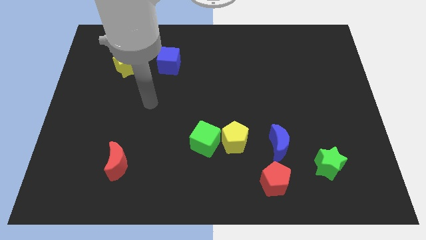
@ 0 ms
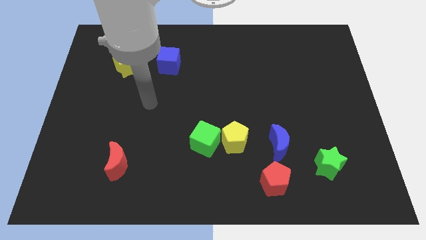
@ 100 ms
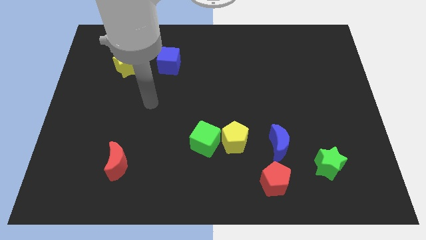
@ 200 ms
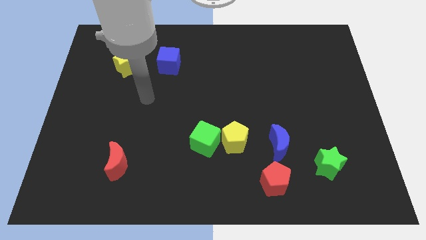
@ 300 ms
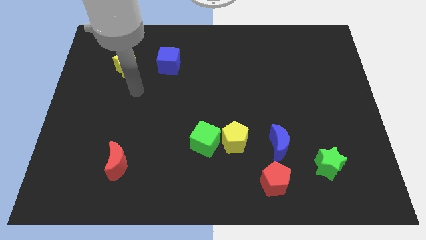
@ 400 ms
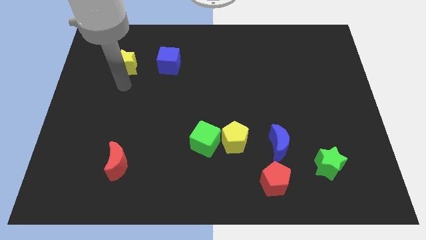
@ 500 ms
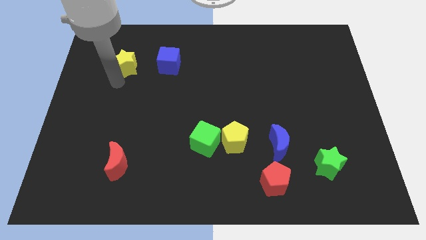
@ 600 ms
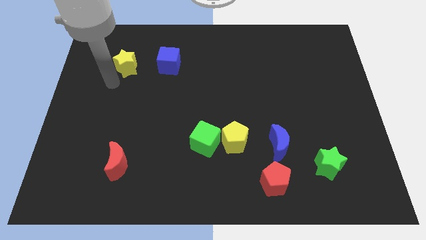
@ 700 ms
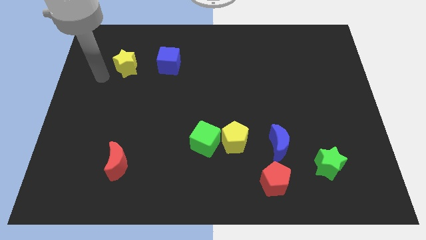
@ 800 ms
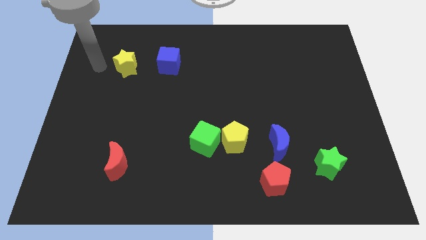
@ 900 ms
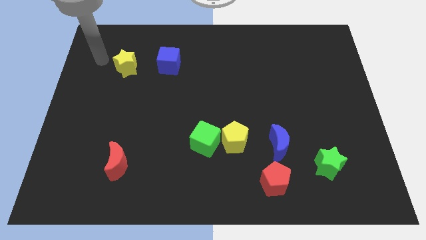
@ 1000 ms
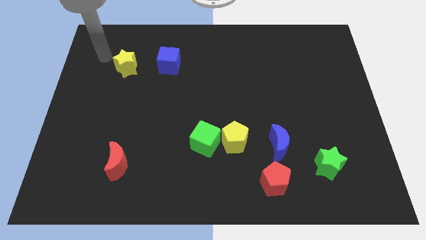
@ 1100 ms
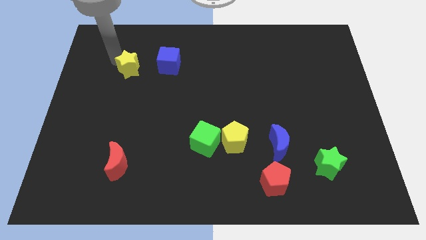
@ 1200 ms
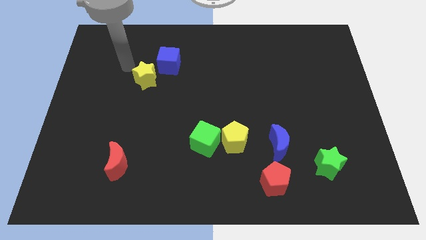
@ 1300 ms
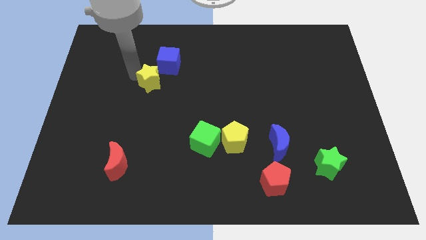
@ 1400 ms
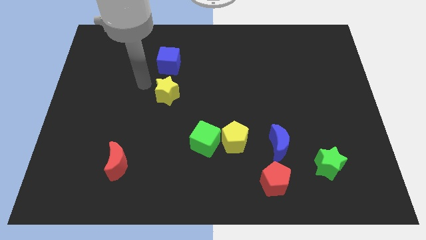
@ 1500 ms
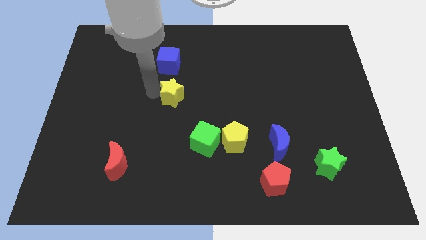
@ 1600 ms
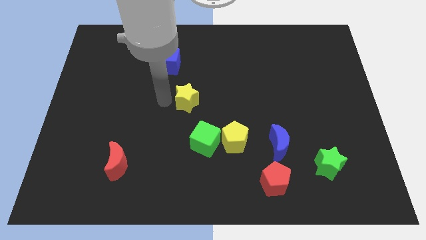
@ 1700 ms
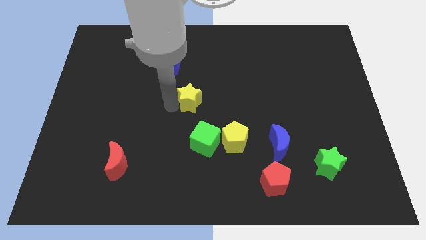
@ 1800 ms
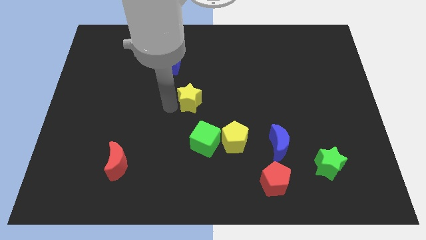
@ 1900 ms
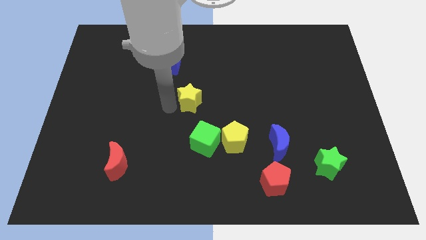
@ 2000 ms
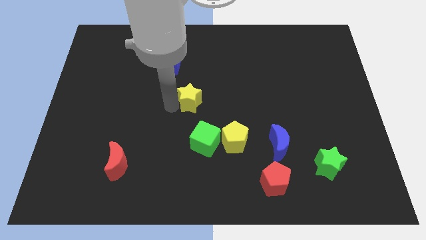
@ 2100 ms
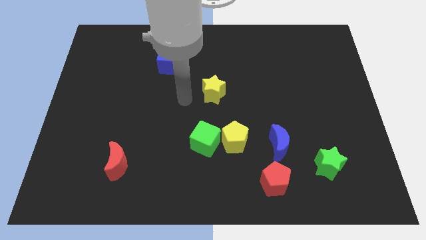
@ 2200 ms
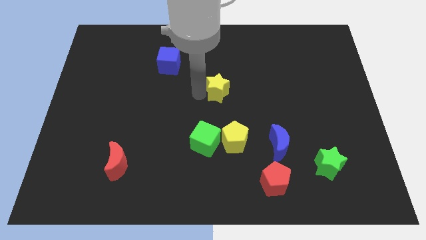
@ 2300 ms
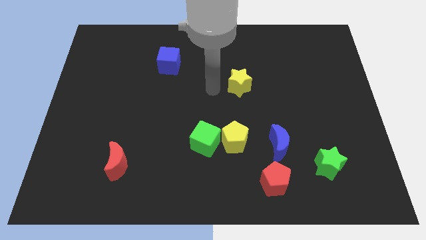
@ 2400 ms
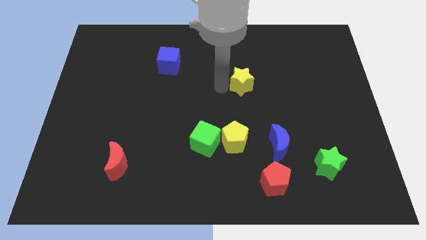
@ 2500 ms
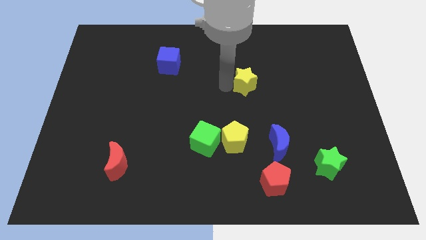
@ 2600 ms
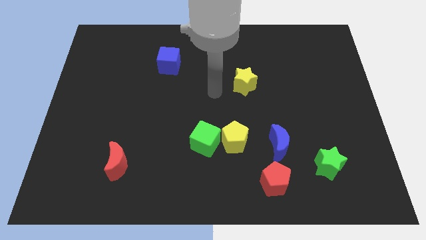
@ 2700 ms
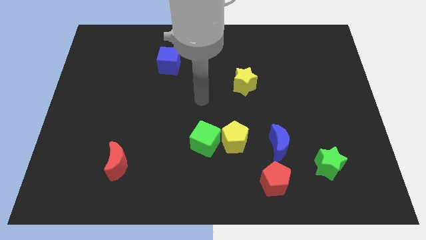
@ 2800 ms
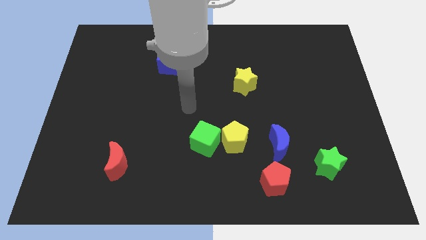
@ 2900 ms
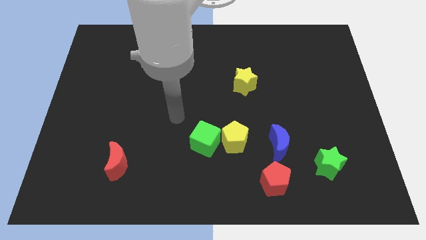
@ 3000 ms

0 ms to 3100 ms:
place yellow star above yellow pentagon

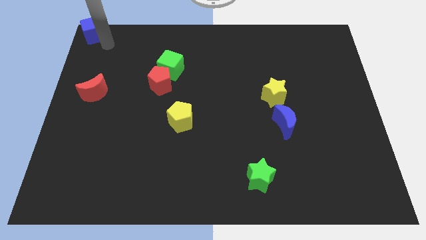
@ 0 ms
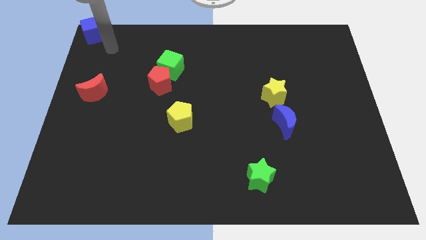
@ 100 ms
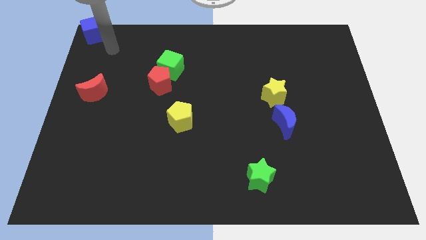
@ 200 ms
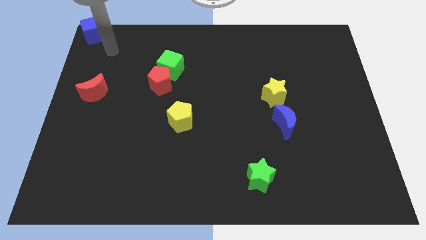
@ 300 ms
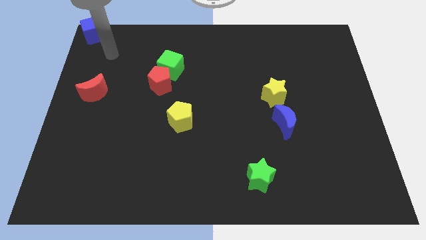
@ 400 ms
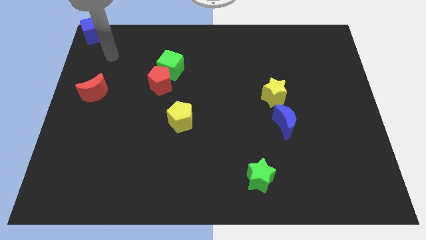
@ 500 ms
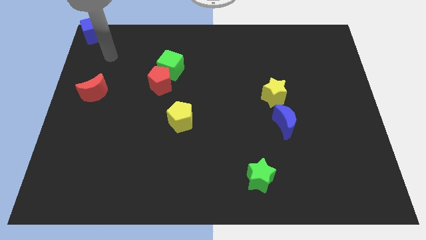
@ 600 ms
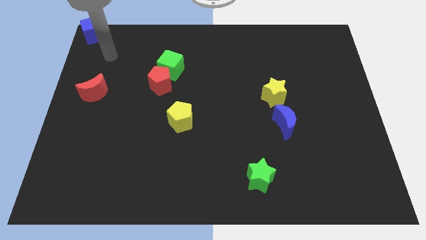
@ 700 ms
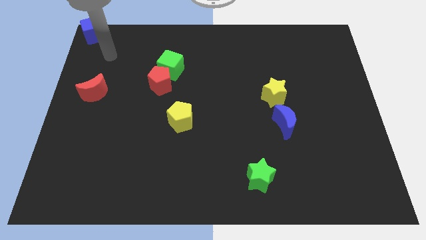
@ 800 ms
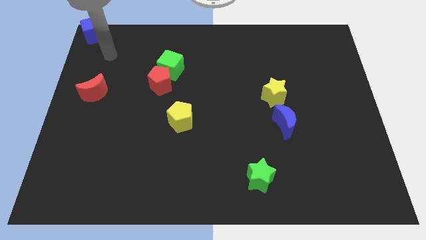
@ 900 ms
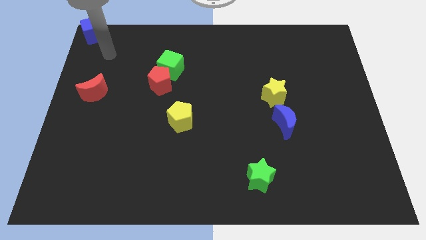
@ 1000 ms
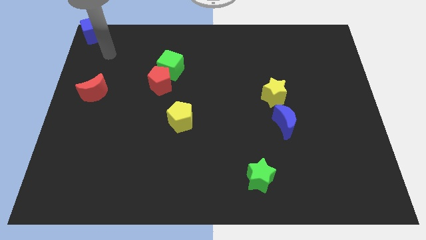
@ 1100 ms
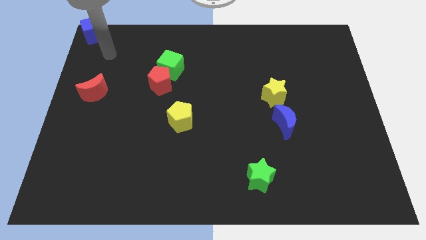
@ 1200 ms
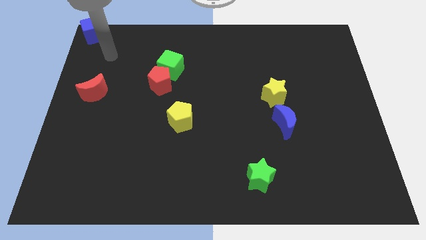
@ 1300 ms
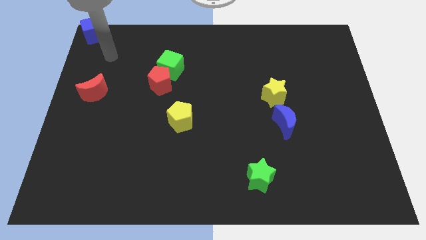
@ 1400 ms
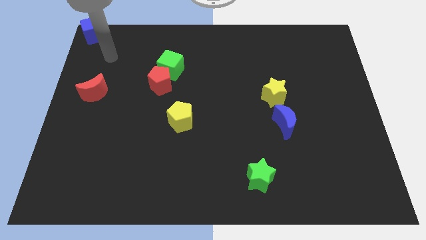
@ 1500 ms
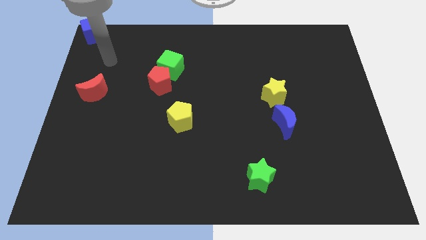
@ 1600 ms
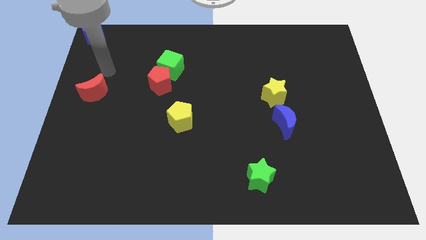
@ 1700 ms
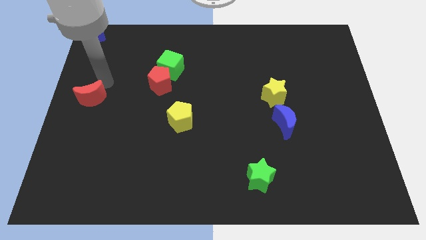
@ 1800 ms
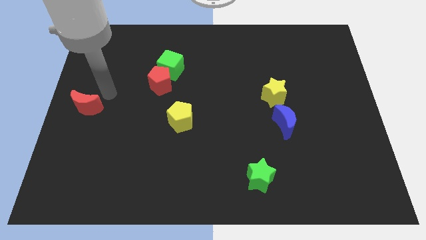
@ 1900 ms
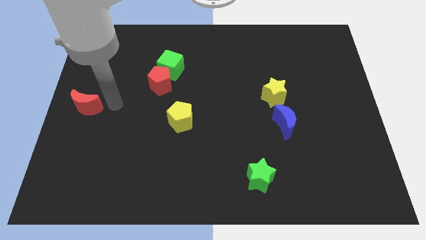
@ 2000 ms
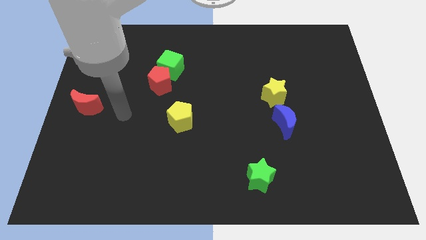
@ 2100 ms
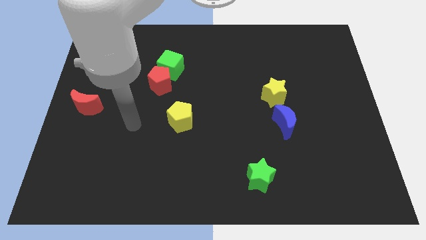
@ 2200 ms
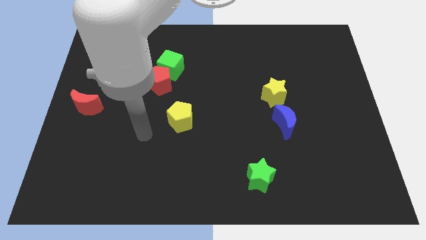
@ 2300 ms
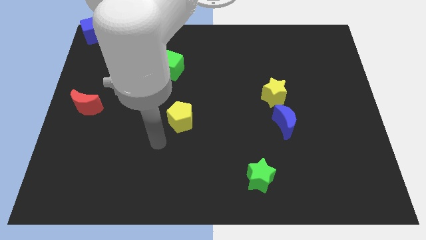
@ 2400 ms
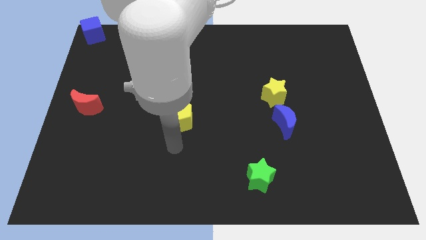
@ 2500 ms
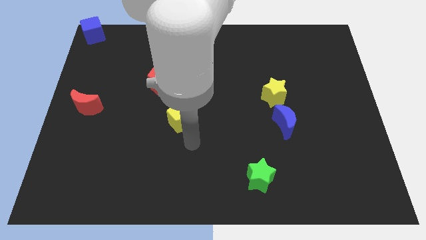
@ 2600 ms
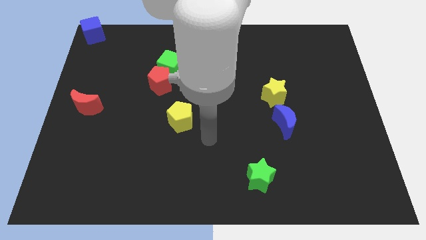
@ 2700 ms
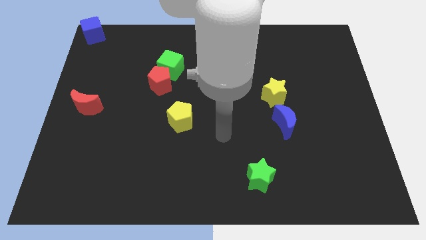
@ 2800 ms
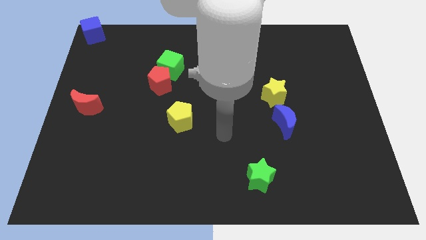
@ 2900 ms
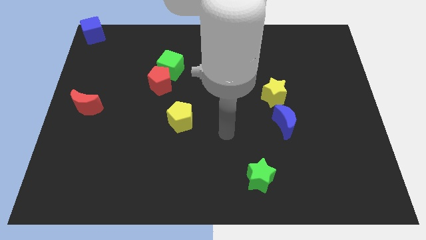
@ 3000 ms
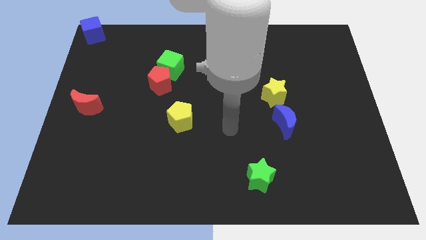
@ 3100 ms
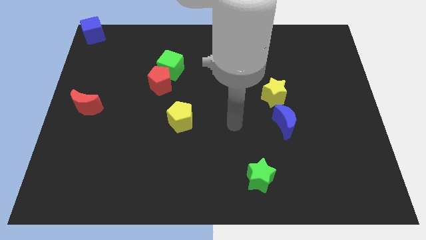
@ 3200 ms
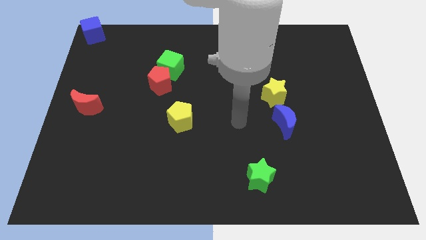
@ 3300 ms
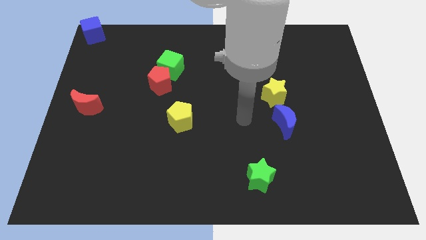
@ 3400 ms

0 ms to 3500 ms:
slightly push the red crescent to the left center of the board

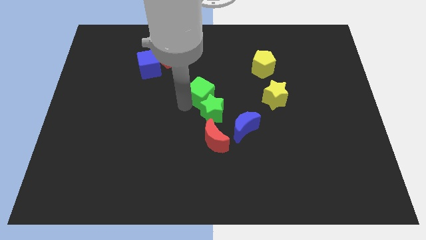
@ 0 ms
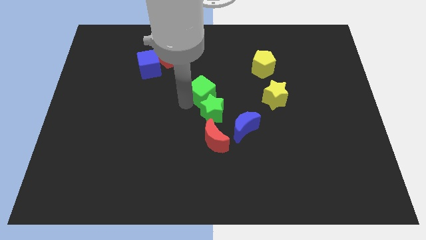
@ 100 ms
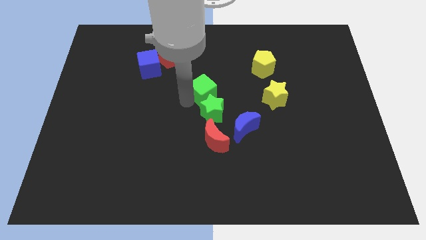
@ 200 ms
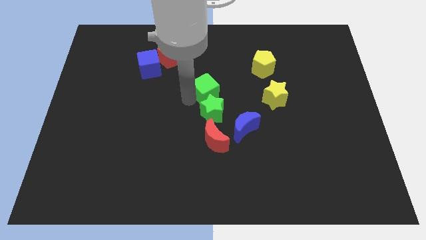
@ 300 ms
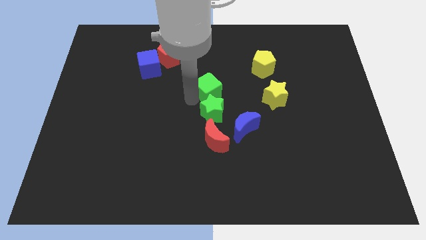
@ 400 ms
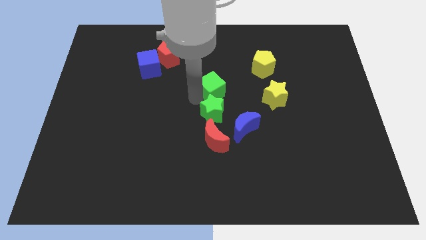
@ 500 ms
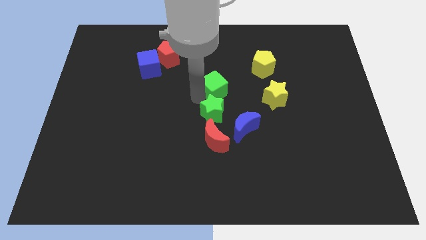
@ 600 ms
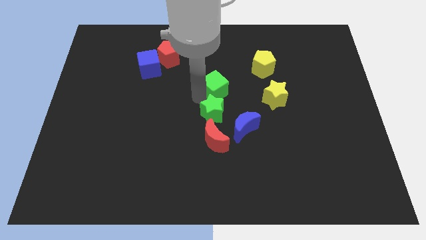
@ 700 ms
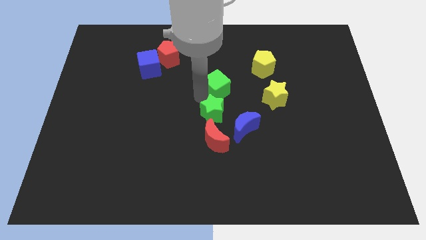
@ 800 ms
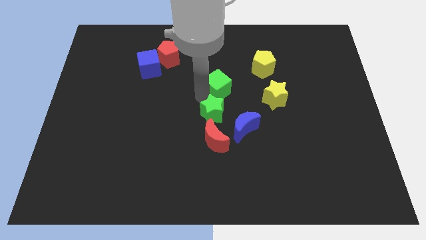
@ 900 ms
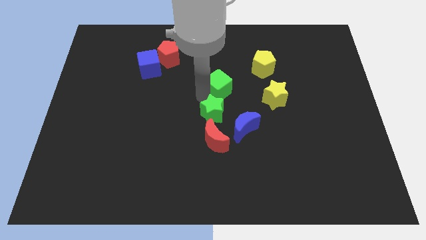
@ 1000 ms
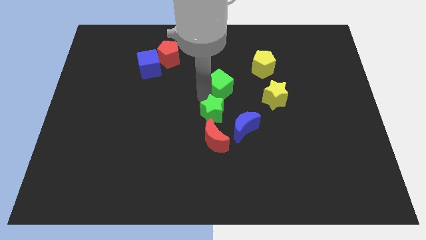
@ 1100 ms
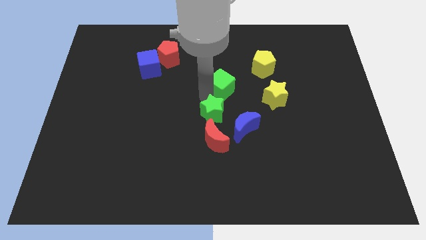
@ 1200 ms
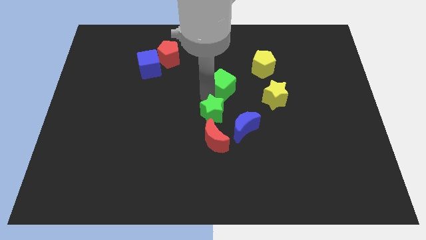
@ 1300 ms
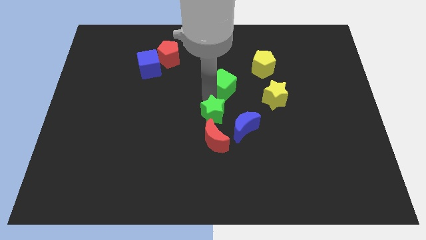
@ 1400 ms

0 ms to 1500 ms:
place the green cube above the green star

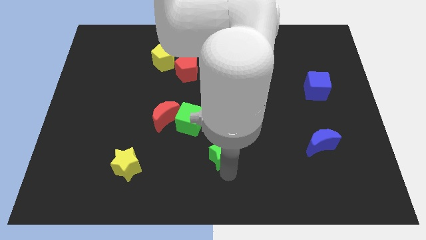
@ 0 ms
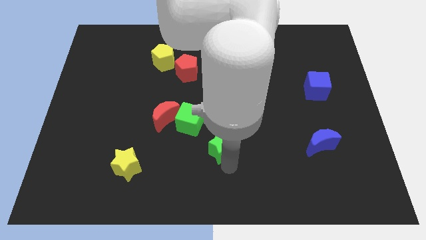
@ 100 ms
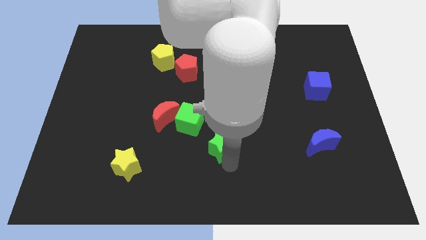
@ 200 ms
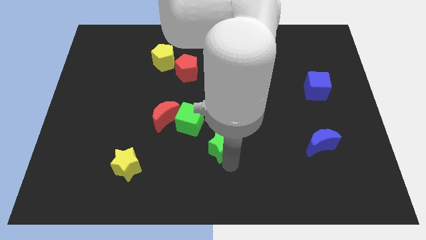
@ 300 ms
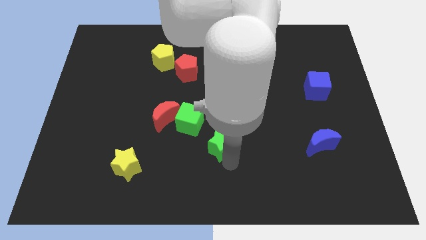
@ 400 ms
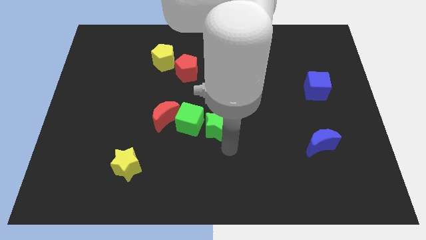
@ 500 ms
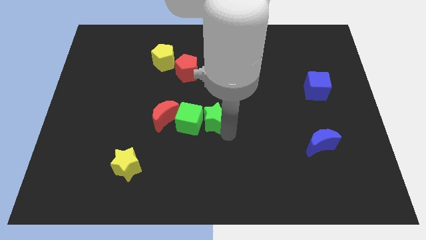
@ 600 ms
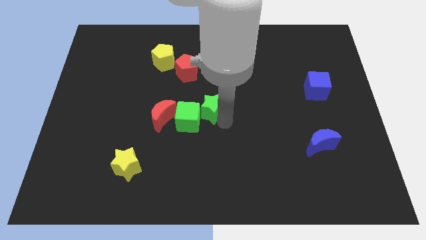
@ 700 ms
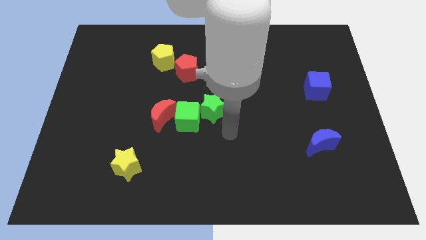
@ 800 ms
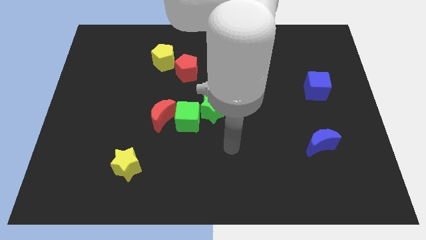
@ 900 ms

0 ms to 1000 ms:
push green star at center
